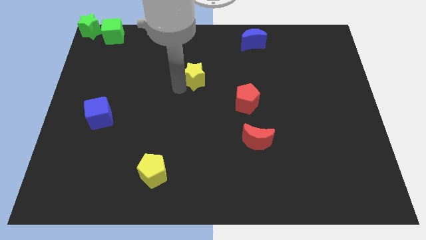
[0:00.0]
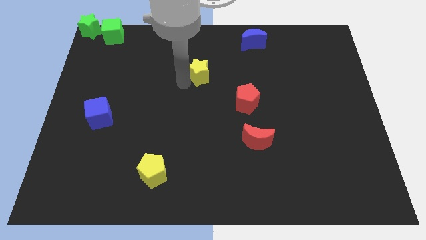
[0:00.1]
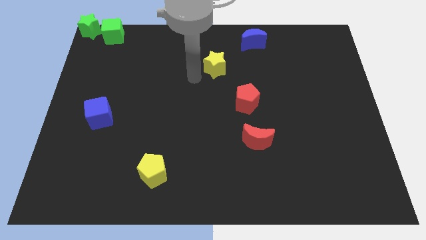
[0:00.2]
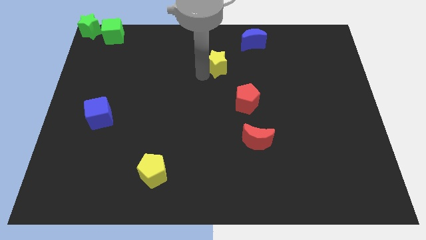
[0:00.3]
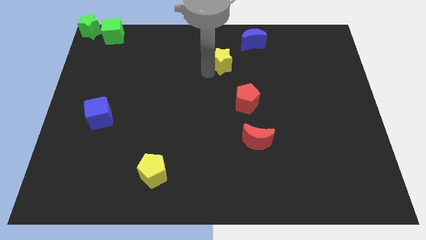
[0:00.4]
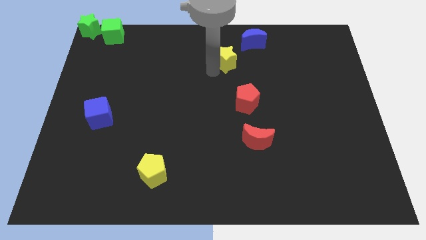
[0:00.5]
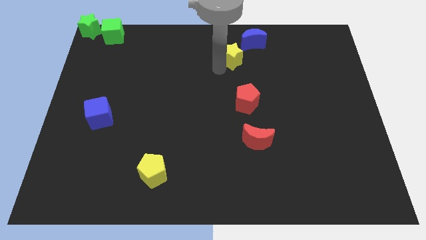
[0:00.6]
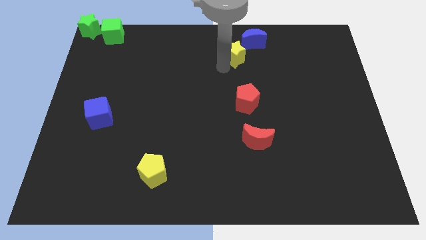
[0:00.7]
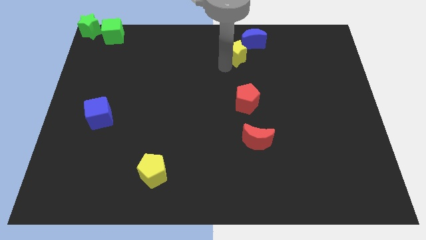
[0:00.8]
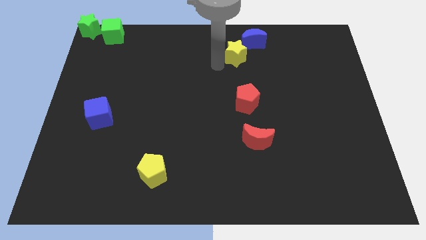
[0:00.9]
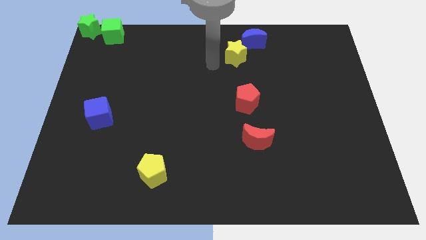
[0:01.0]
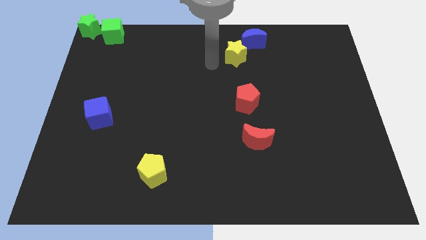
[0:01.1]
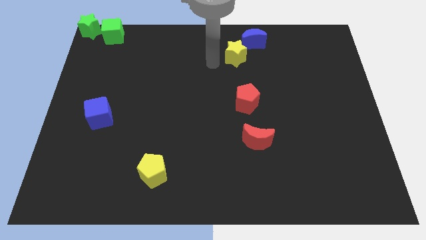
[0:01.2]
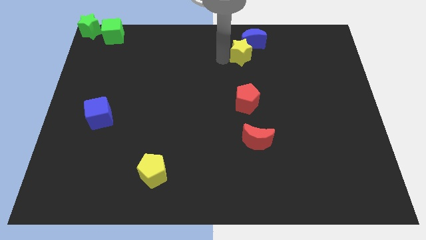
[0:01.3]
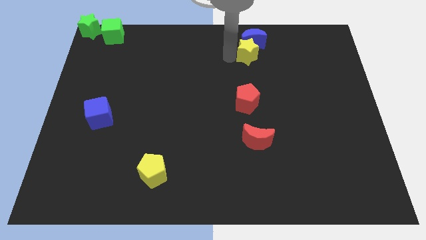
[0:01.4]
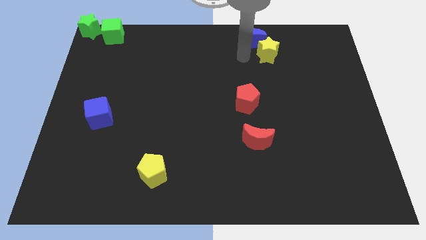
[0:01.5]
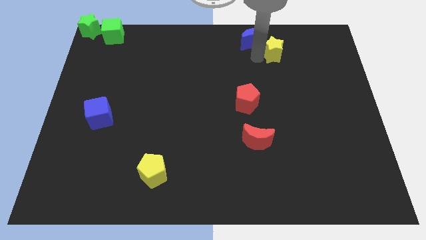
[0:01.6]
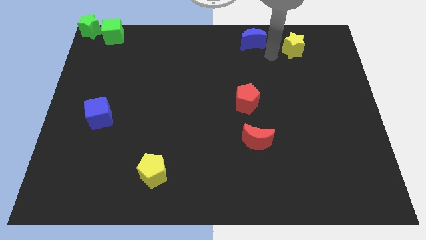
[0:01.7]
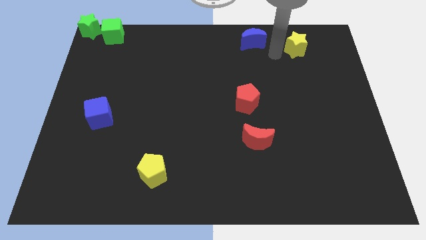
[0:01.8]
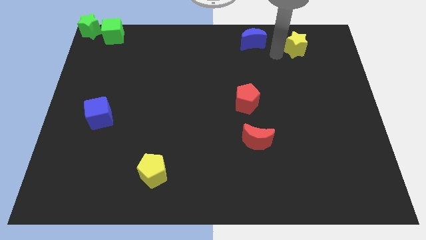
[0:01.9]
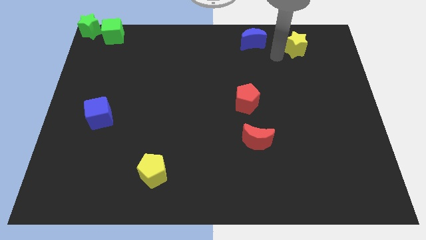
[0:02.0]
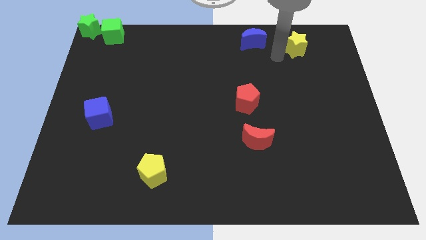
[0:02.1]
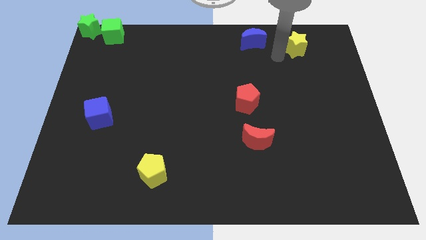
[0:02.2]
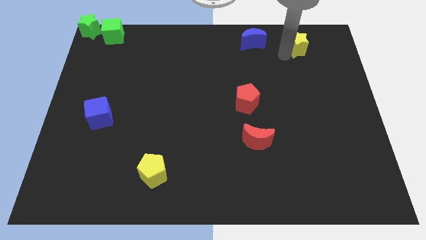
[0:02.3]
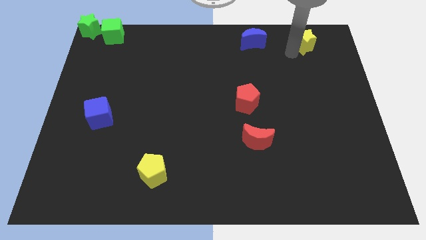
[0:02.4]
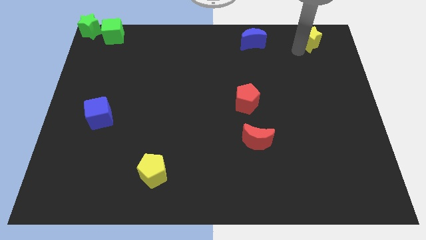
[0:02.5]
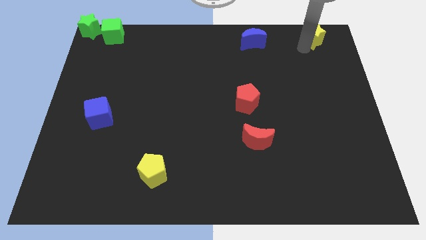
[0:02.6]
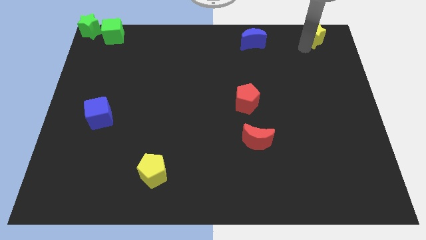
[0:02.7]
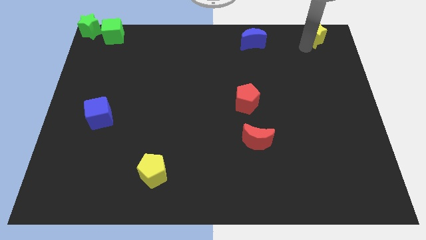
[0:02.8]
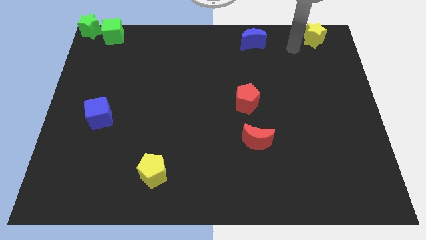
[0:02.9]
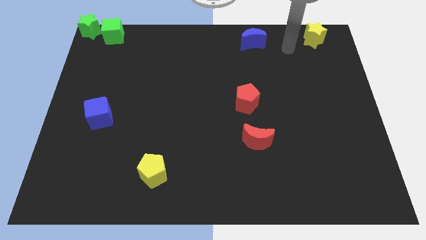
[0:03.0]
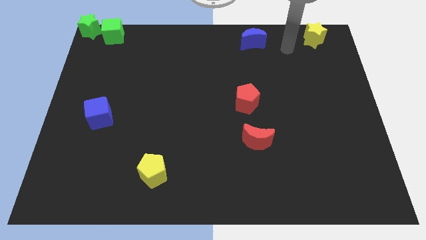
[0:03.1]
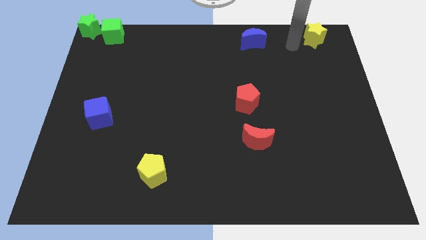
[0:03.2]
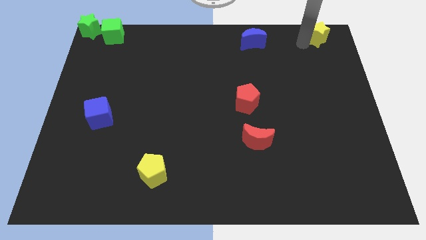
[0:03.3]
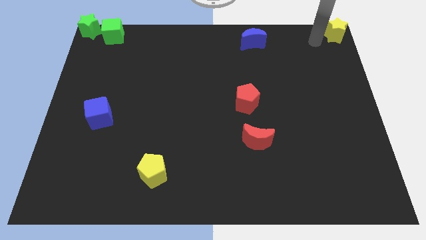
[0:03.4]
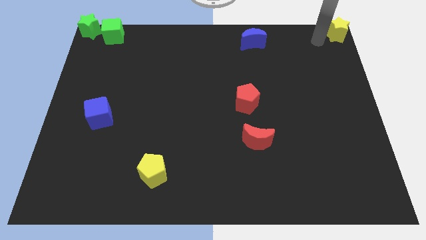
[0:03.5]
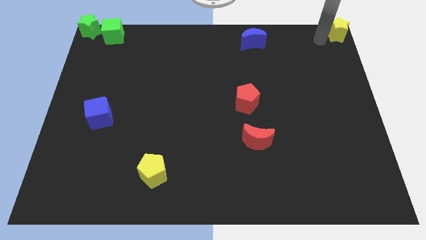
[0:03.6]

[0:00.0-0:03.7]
push the yellow star to the top right

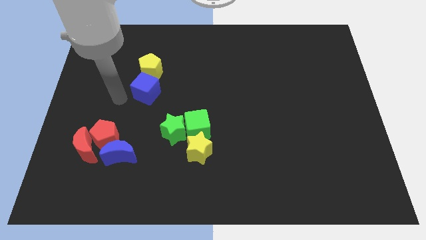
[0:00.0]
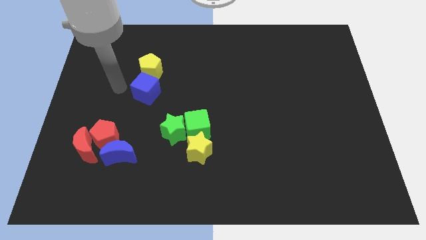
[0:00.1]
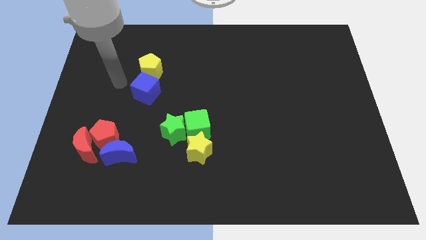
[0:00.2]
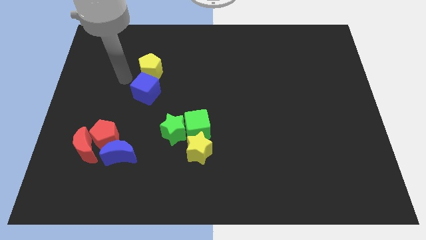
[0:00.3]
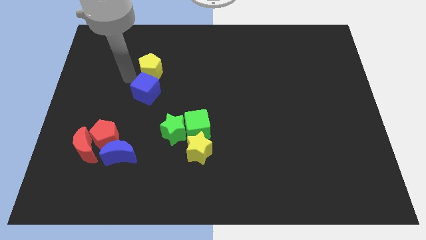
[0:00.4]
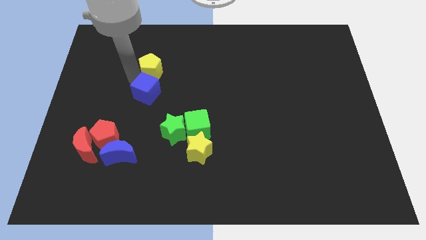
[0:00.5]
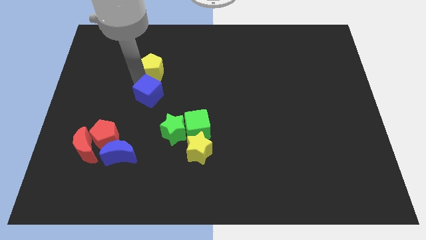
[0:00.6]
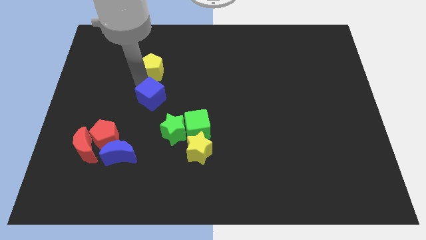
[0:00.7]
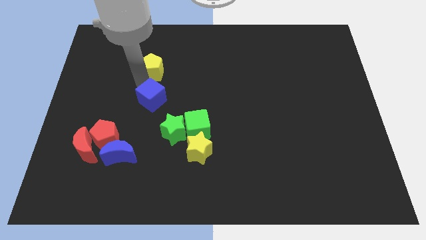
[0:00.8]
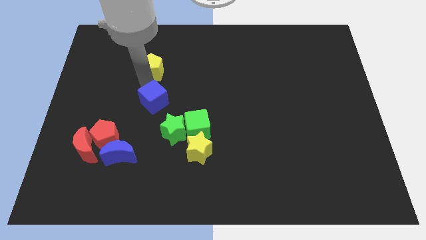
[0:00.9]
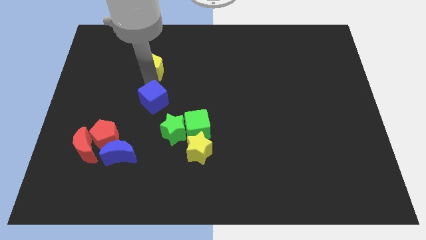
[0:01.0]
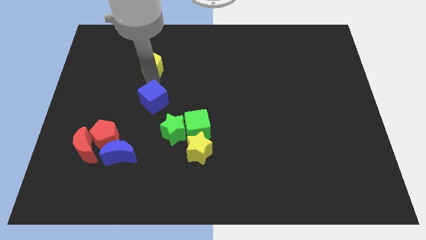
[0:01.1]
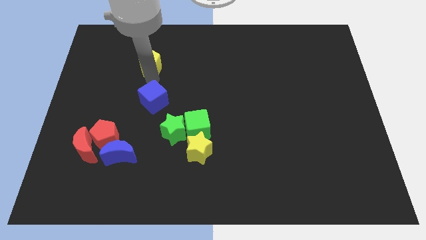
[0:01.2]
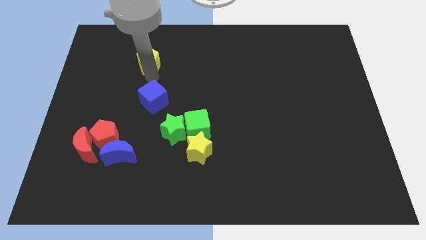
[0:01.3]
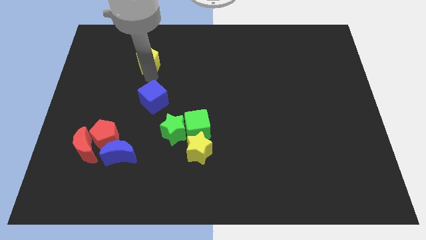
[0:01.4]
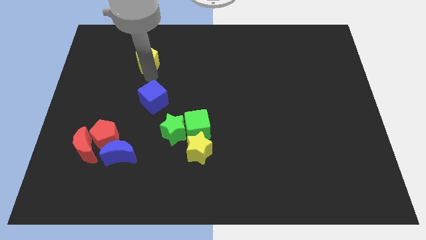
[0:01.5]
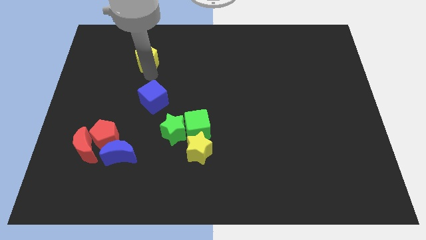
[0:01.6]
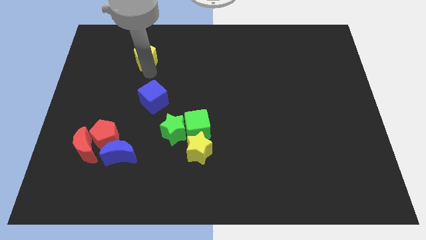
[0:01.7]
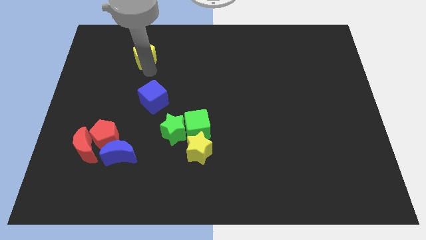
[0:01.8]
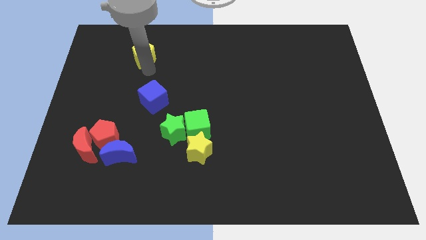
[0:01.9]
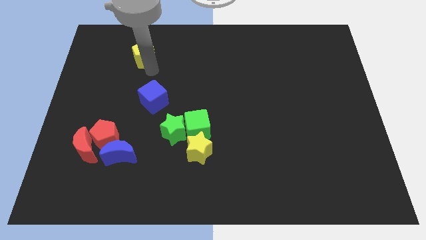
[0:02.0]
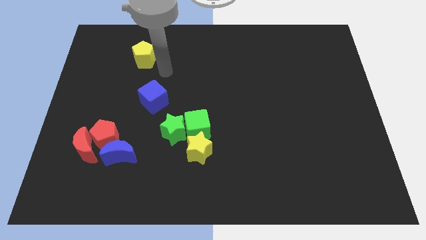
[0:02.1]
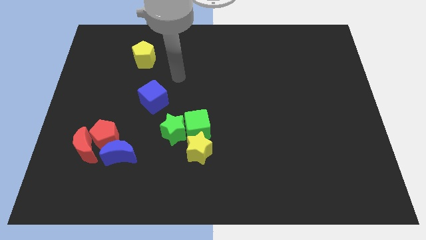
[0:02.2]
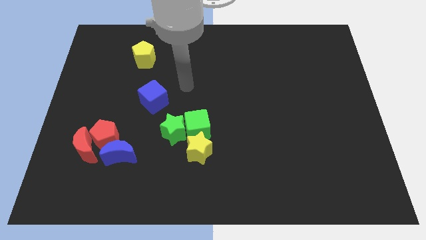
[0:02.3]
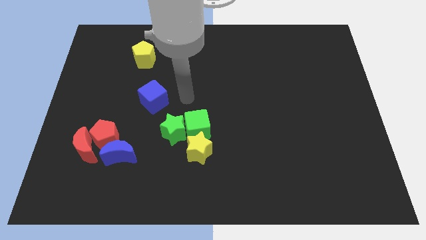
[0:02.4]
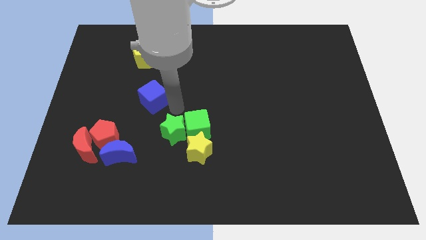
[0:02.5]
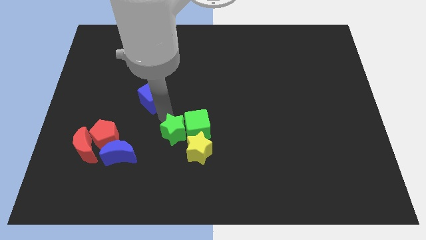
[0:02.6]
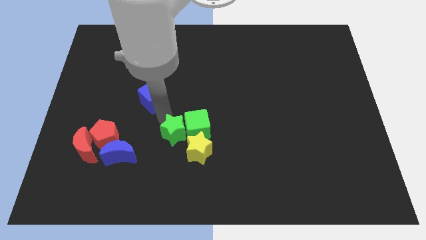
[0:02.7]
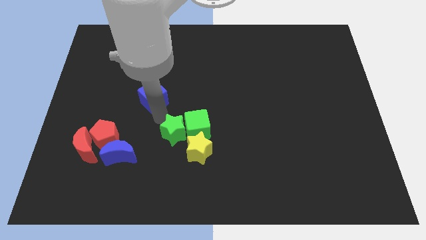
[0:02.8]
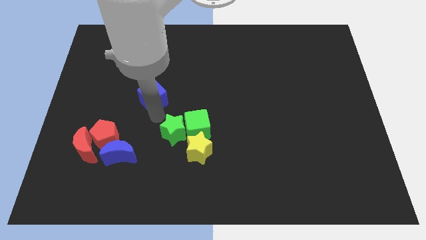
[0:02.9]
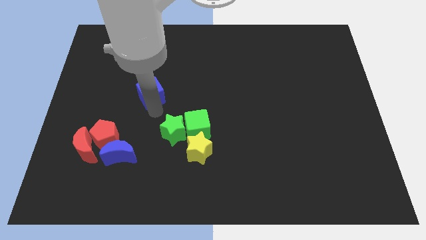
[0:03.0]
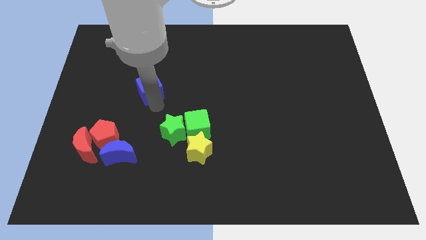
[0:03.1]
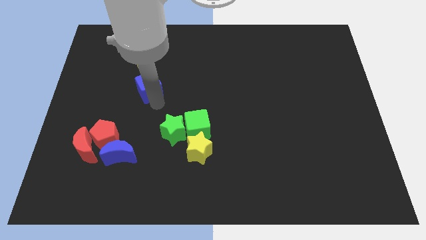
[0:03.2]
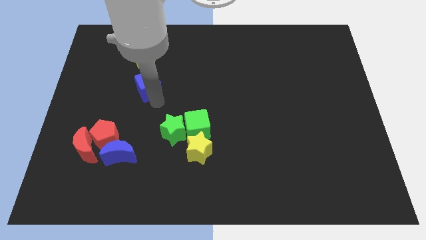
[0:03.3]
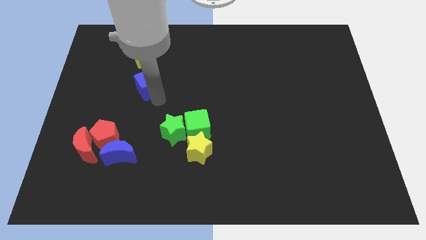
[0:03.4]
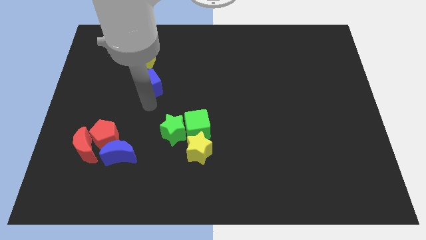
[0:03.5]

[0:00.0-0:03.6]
place the blue cube in between the yellow pentagon and green star

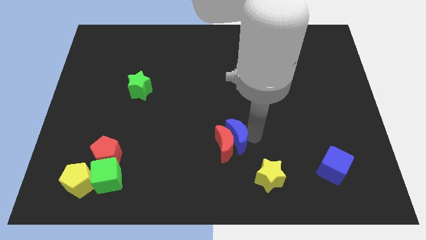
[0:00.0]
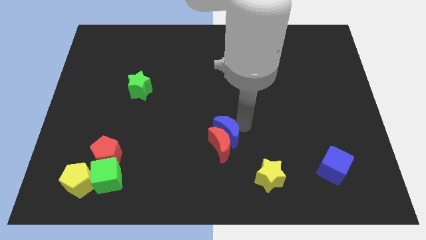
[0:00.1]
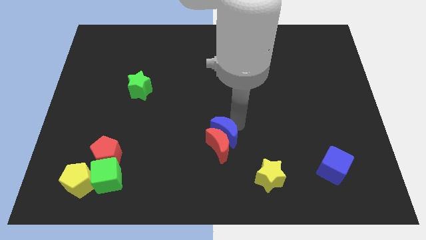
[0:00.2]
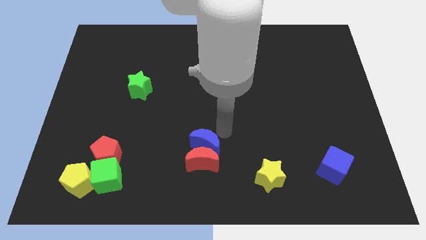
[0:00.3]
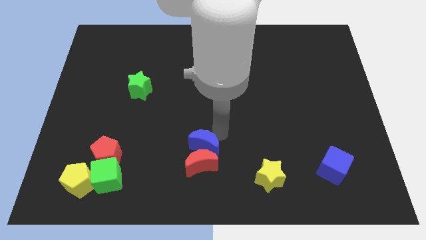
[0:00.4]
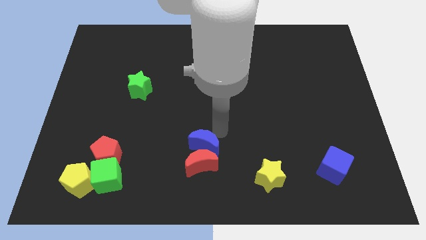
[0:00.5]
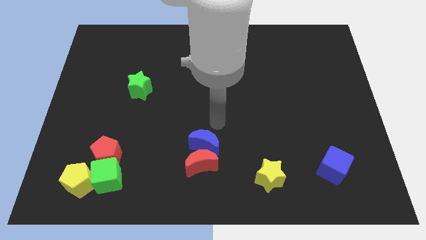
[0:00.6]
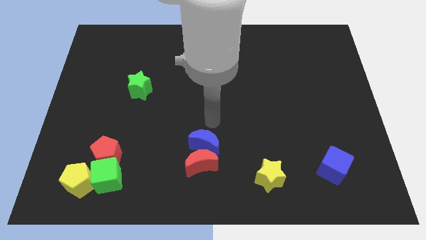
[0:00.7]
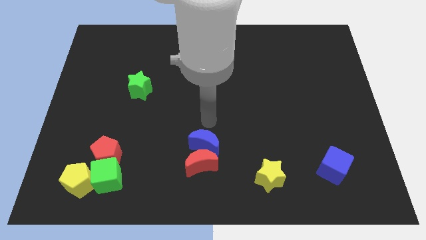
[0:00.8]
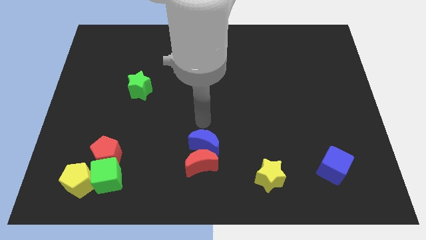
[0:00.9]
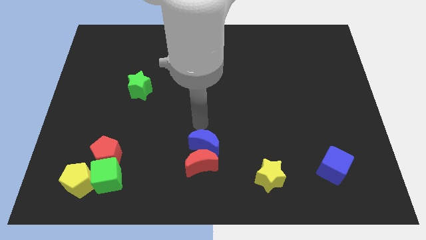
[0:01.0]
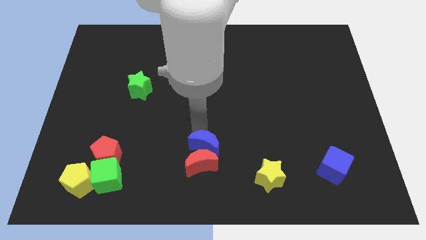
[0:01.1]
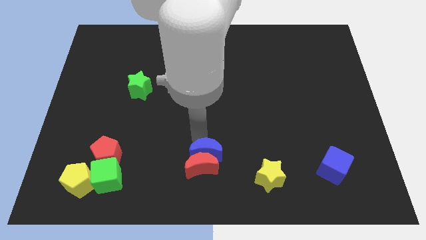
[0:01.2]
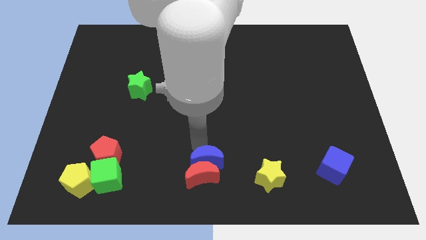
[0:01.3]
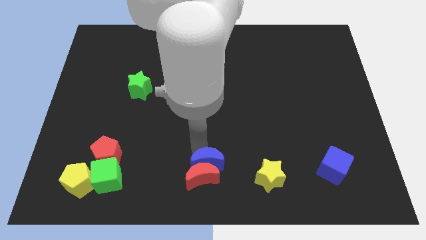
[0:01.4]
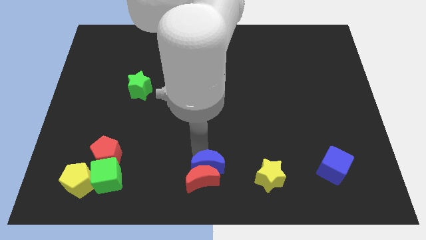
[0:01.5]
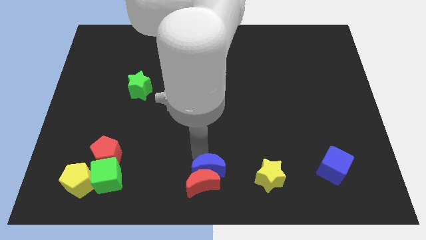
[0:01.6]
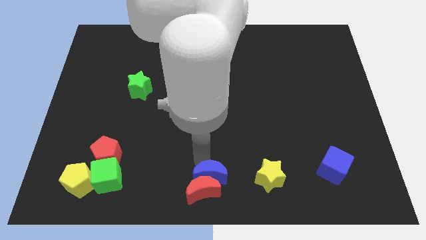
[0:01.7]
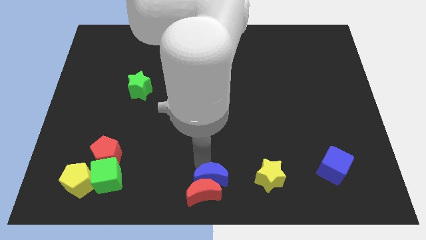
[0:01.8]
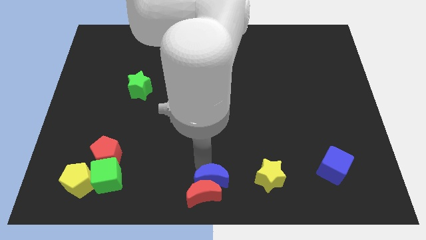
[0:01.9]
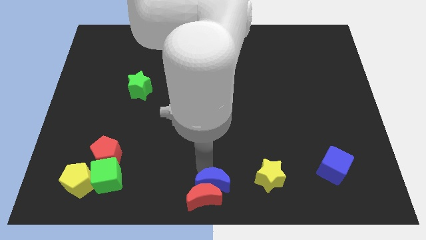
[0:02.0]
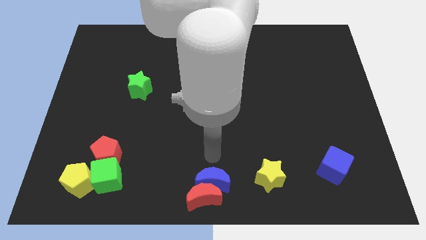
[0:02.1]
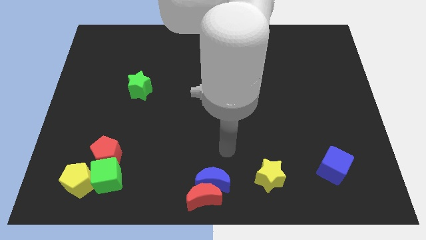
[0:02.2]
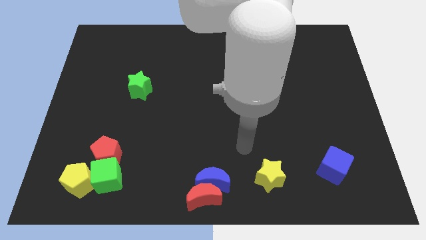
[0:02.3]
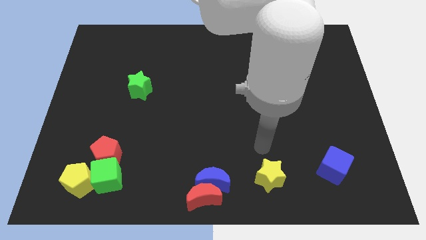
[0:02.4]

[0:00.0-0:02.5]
place the red crescent and blue crescent parallel to the bottom center
